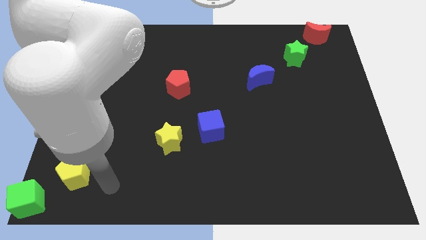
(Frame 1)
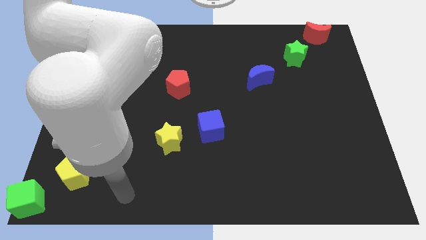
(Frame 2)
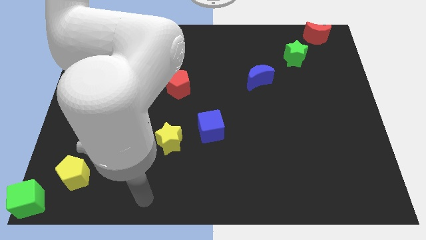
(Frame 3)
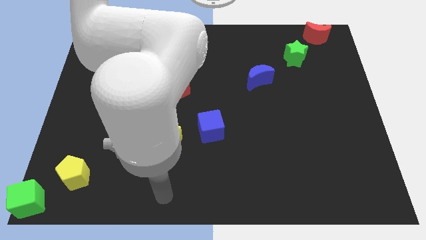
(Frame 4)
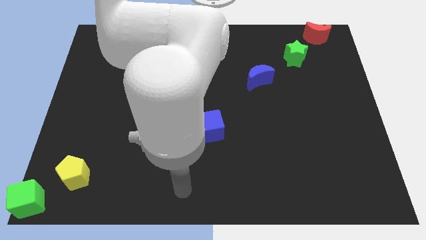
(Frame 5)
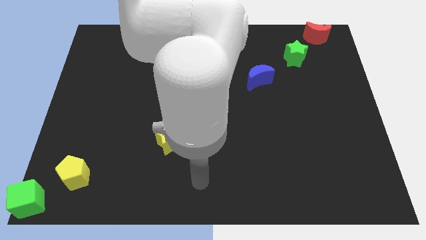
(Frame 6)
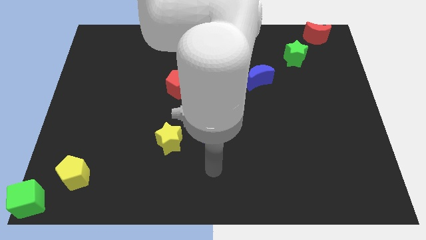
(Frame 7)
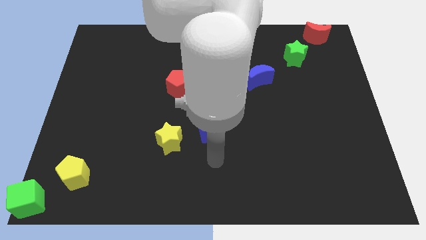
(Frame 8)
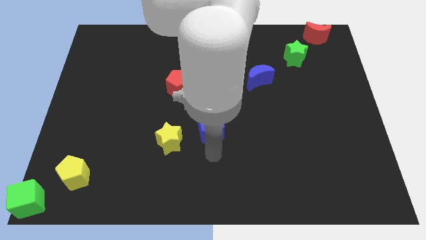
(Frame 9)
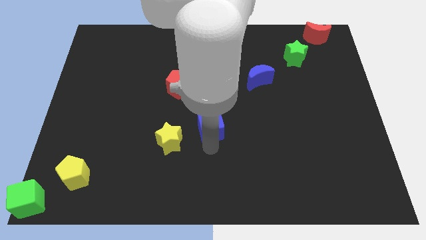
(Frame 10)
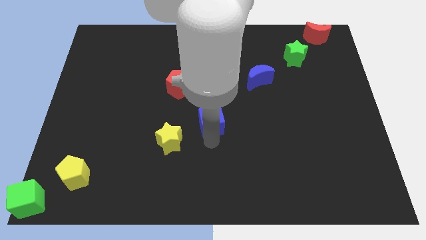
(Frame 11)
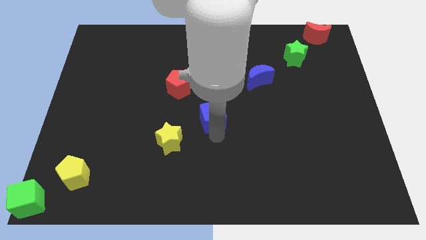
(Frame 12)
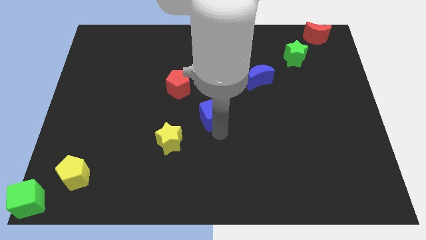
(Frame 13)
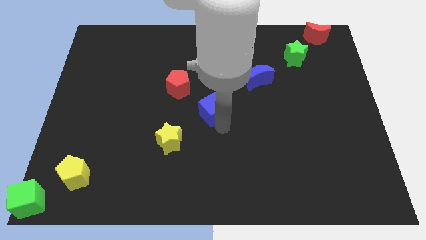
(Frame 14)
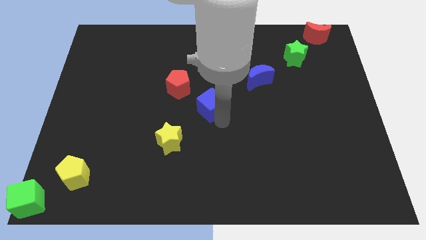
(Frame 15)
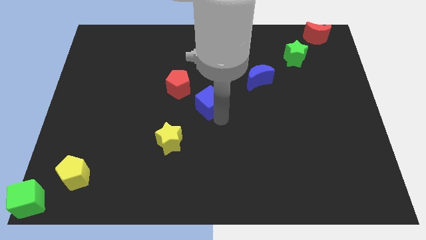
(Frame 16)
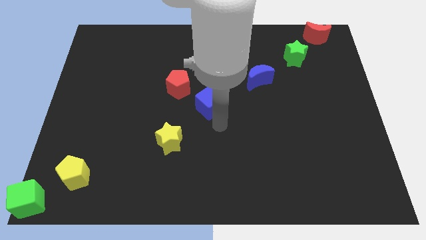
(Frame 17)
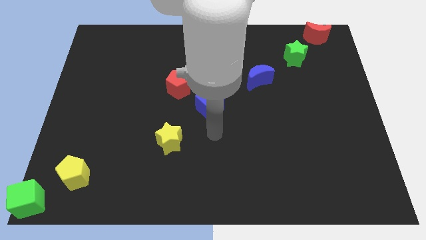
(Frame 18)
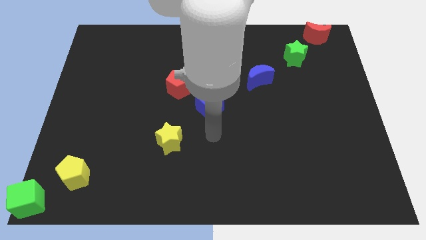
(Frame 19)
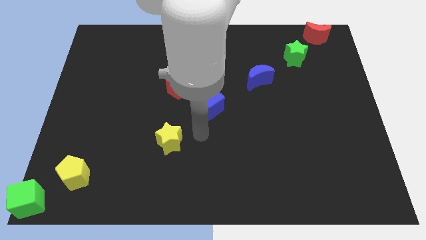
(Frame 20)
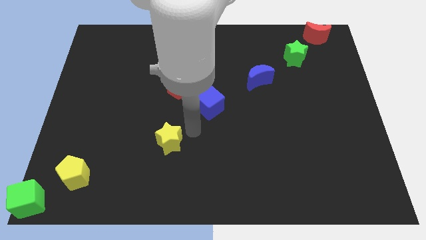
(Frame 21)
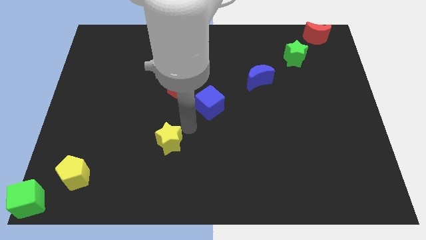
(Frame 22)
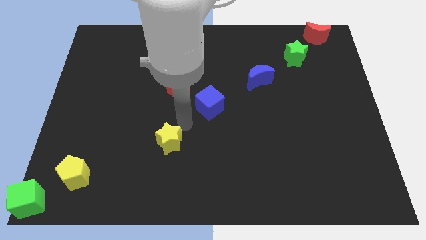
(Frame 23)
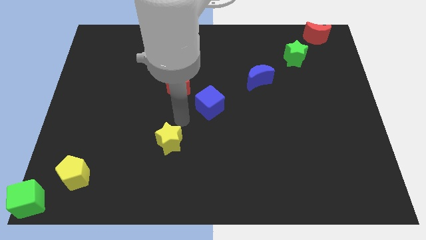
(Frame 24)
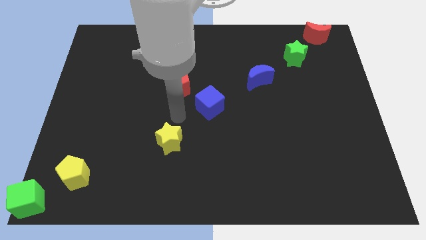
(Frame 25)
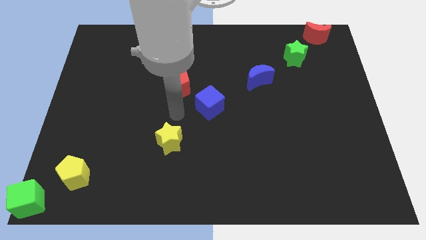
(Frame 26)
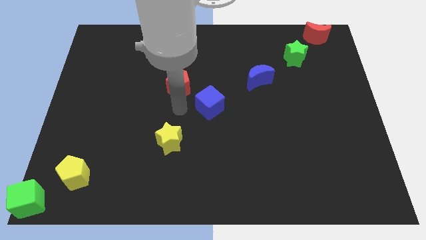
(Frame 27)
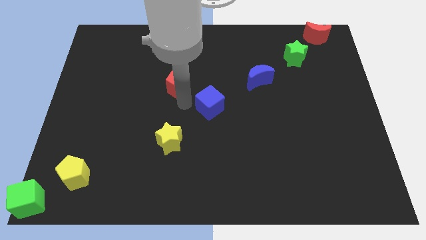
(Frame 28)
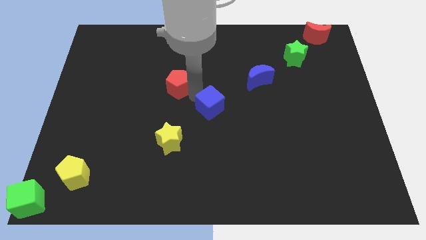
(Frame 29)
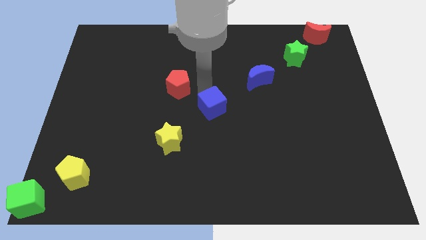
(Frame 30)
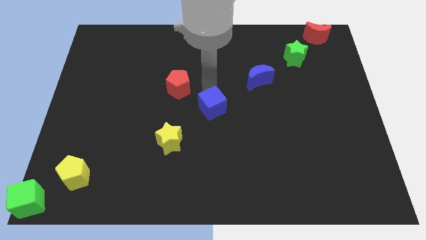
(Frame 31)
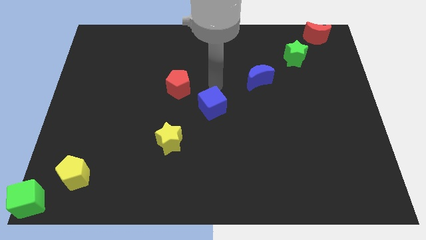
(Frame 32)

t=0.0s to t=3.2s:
place the blue cube at the center of the board

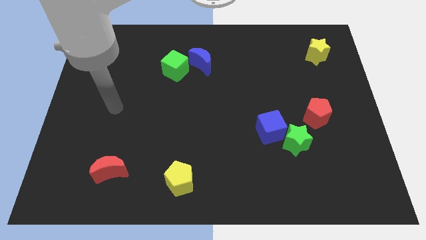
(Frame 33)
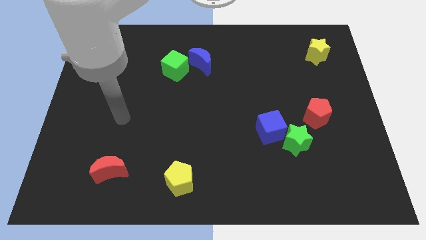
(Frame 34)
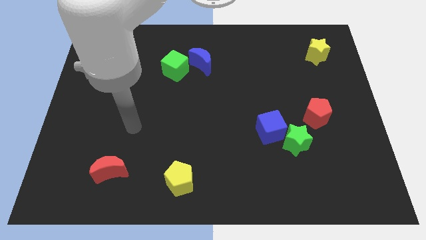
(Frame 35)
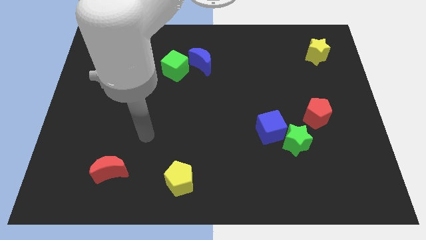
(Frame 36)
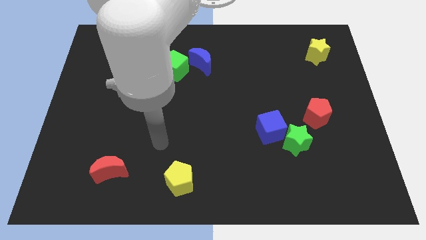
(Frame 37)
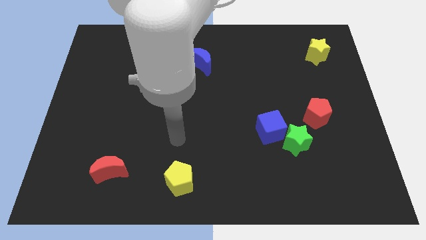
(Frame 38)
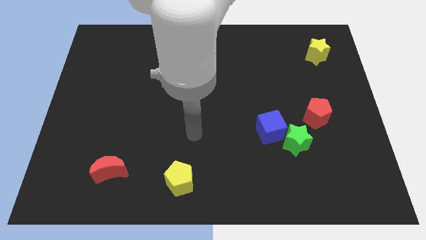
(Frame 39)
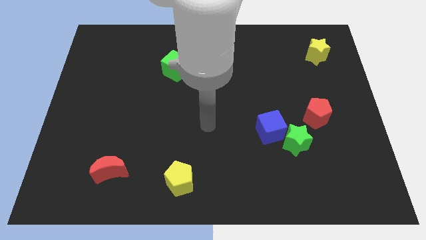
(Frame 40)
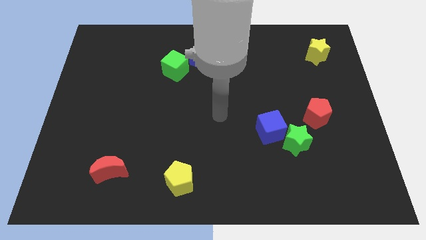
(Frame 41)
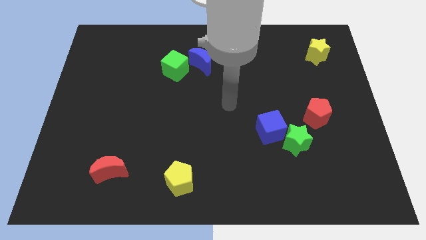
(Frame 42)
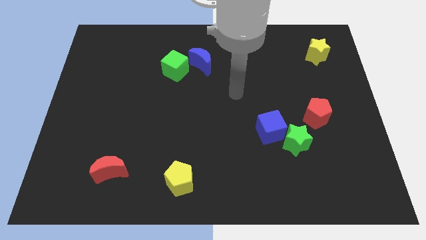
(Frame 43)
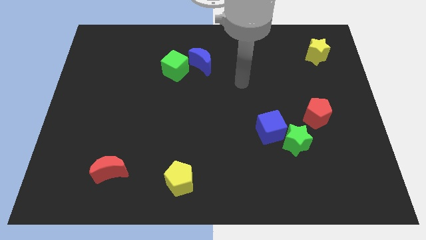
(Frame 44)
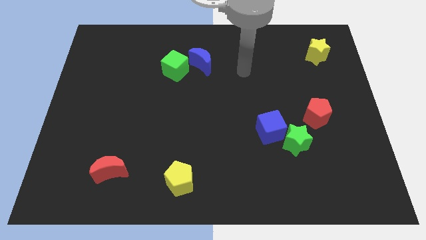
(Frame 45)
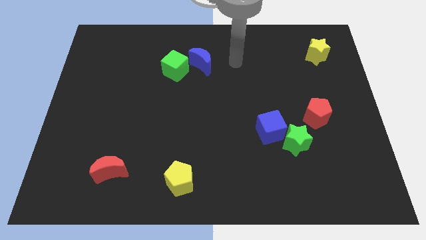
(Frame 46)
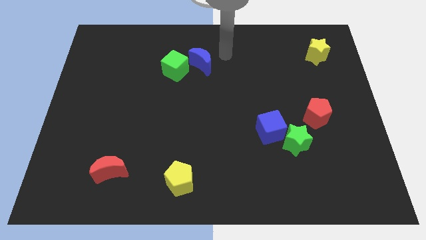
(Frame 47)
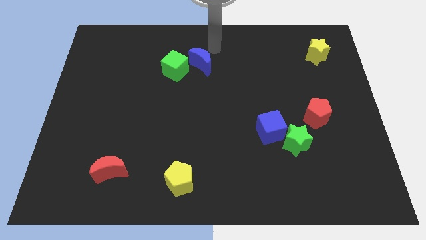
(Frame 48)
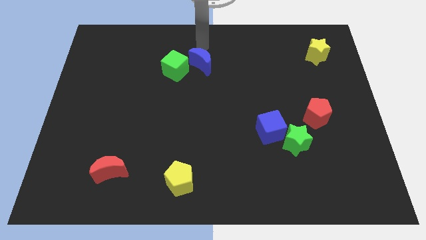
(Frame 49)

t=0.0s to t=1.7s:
move your arm above the blue crescent

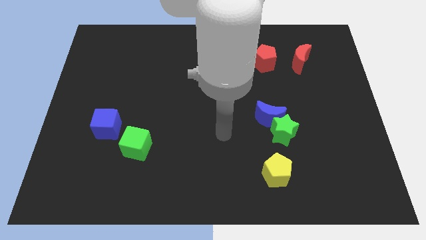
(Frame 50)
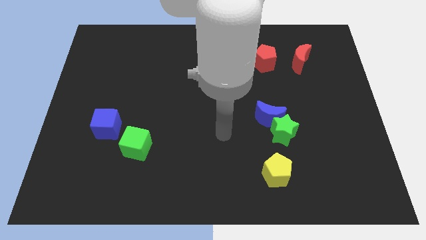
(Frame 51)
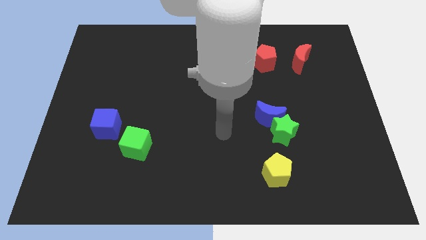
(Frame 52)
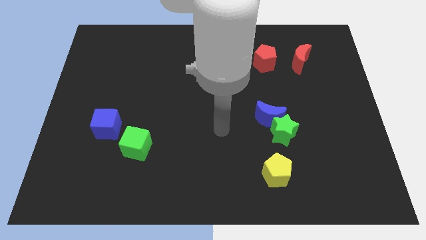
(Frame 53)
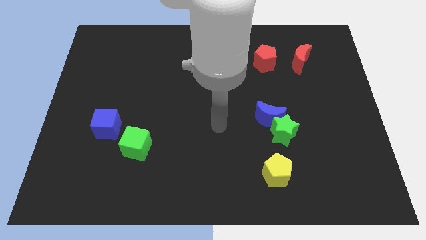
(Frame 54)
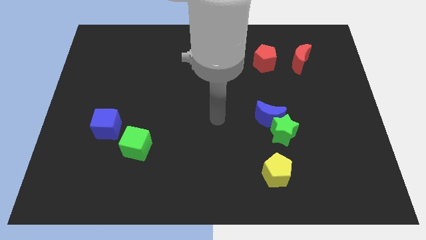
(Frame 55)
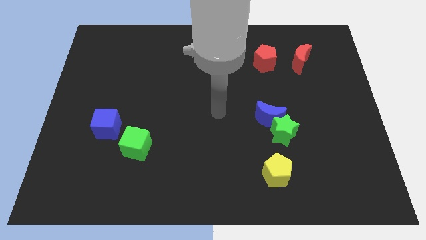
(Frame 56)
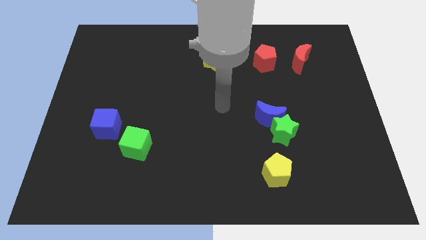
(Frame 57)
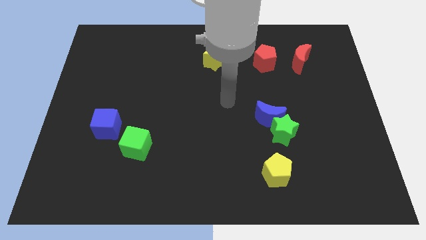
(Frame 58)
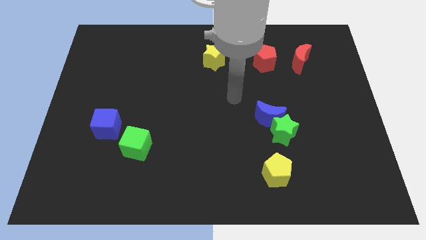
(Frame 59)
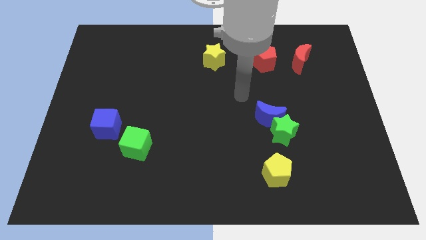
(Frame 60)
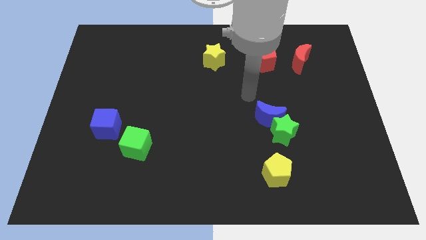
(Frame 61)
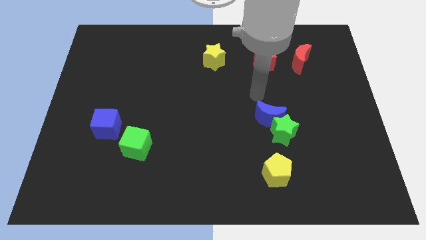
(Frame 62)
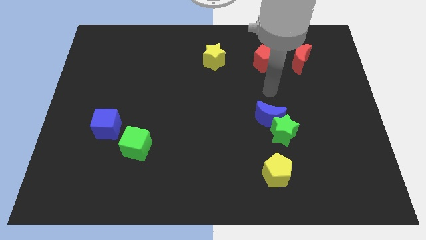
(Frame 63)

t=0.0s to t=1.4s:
point your arm at the top side of the blue moon

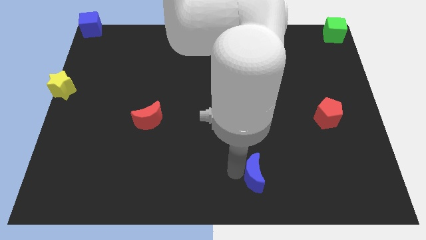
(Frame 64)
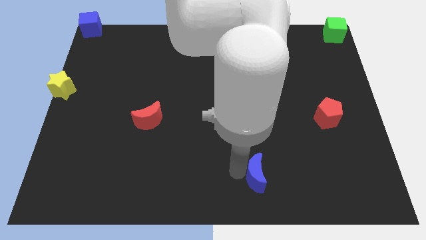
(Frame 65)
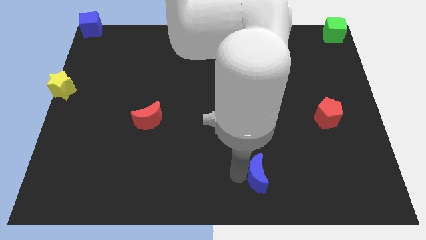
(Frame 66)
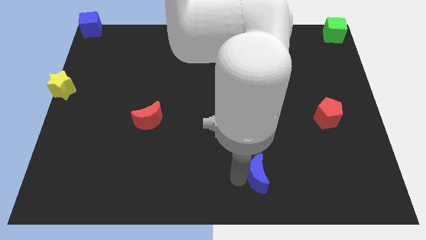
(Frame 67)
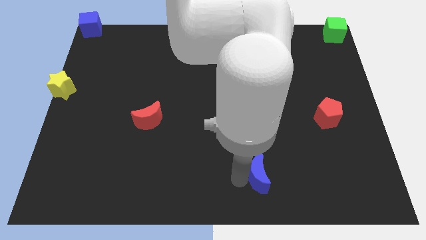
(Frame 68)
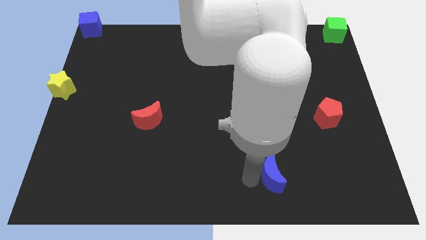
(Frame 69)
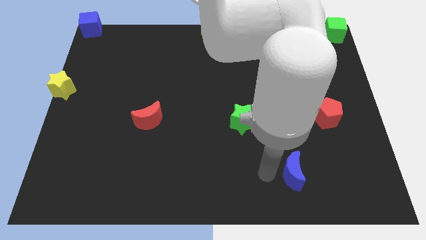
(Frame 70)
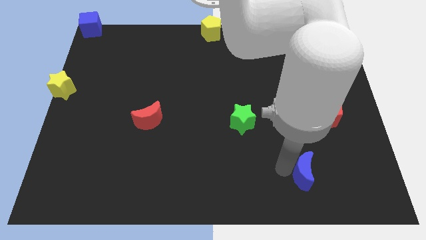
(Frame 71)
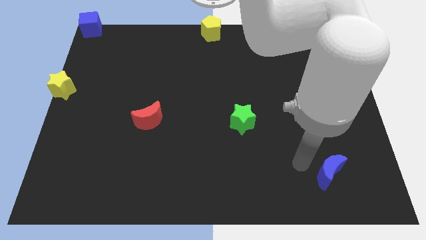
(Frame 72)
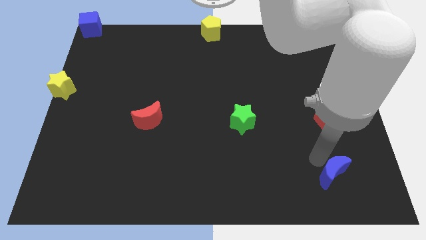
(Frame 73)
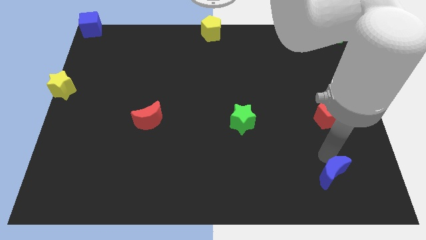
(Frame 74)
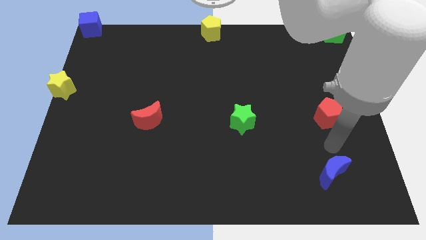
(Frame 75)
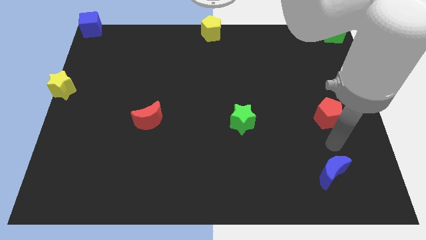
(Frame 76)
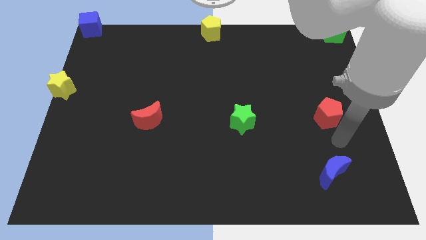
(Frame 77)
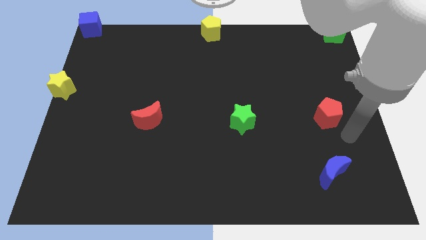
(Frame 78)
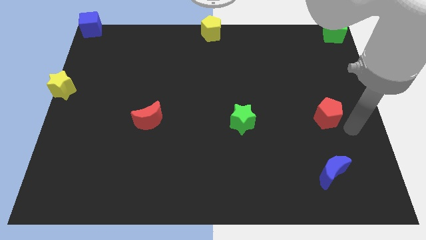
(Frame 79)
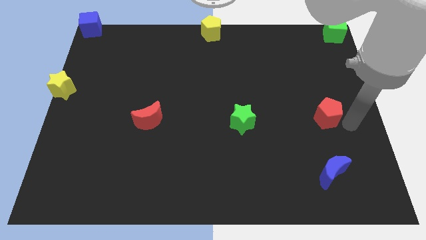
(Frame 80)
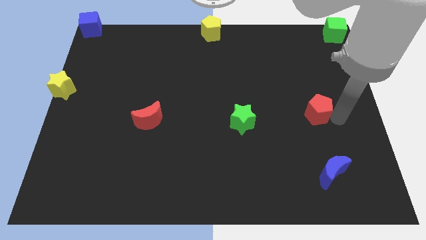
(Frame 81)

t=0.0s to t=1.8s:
push the blue crescent below the red pentagon

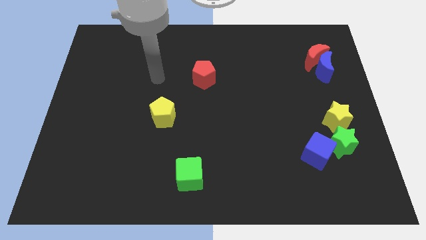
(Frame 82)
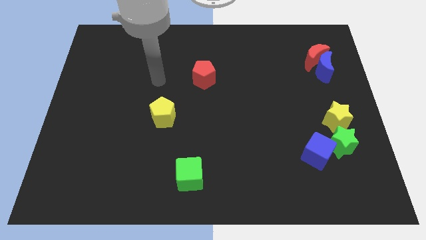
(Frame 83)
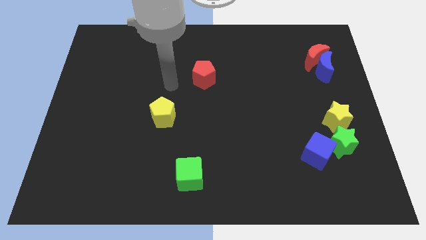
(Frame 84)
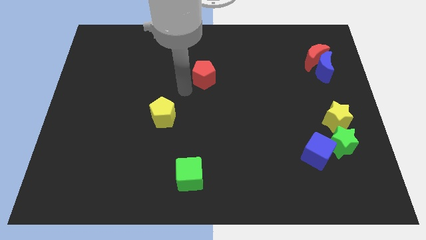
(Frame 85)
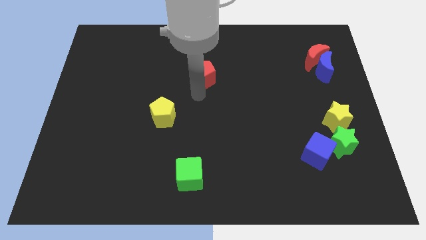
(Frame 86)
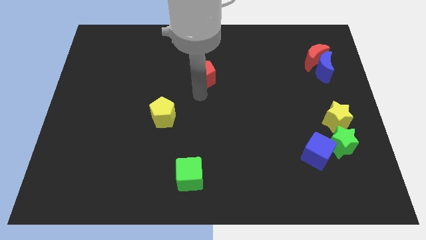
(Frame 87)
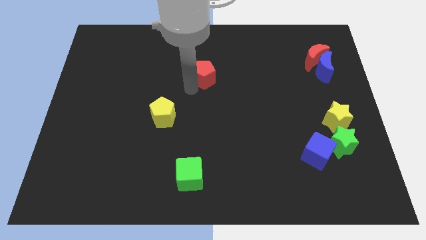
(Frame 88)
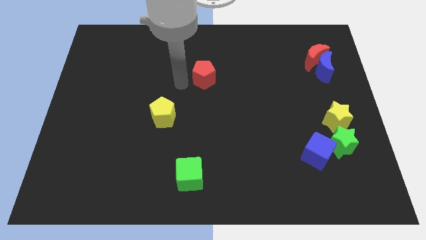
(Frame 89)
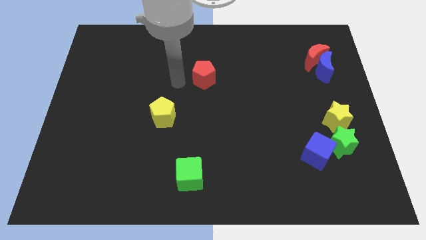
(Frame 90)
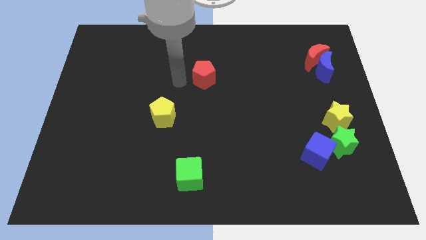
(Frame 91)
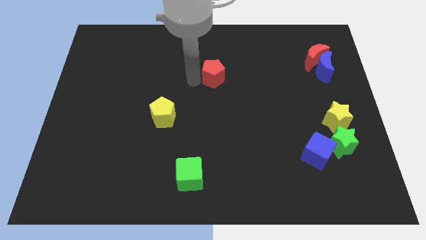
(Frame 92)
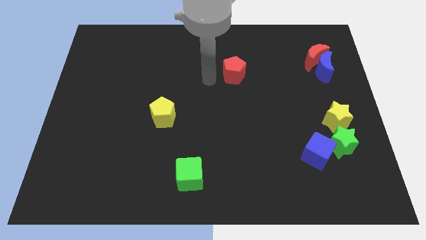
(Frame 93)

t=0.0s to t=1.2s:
touch red pentagon slightly
